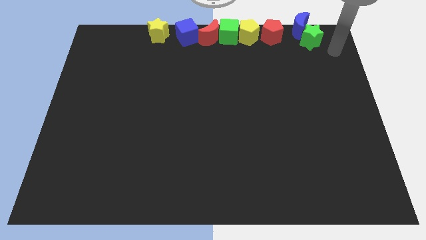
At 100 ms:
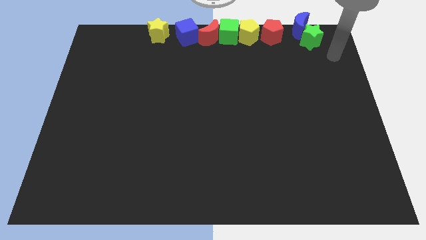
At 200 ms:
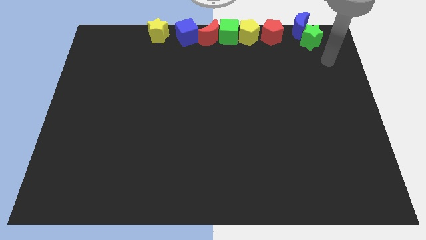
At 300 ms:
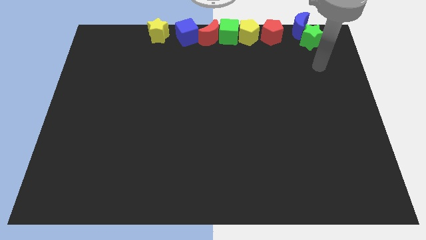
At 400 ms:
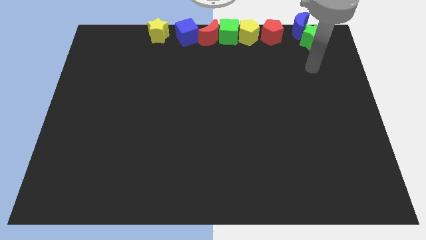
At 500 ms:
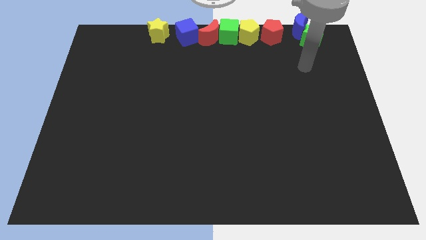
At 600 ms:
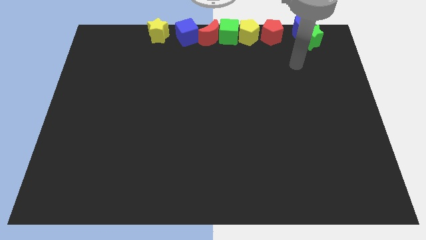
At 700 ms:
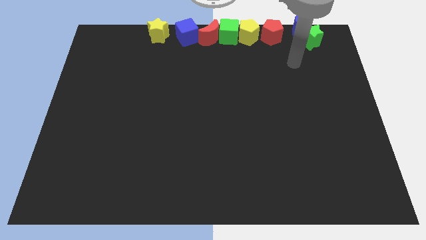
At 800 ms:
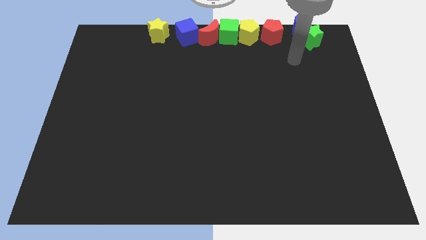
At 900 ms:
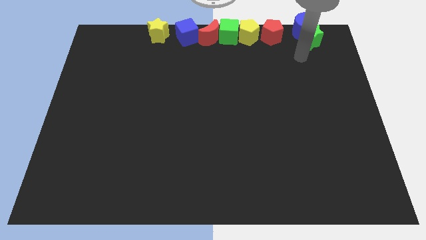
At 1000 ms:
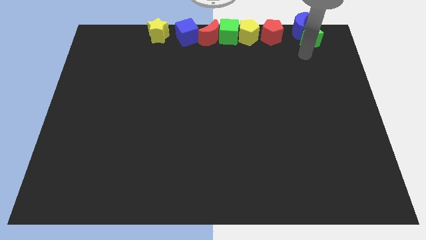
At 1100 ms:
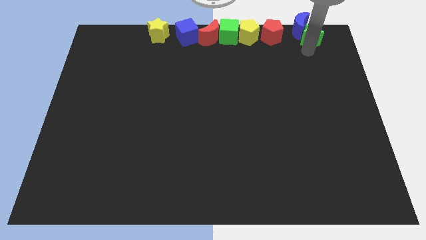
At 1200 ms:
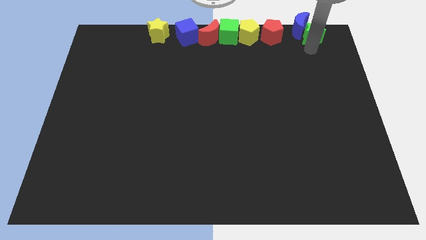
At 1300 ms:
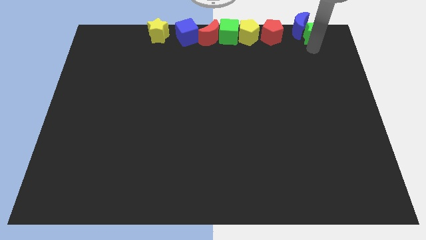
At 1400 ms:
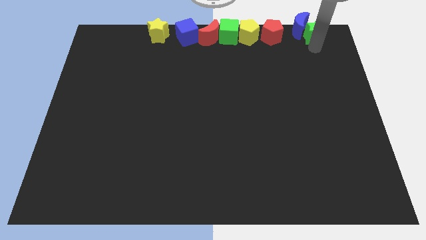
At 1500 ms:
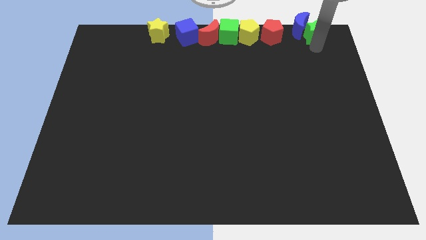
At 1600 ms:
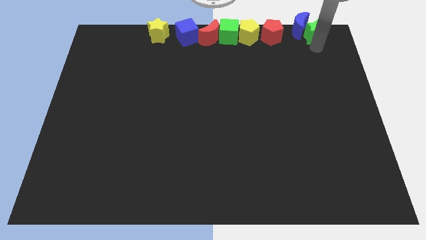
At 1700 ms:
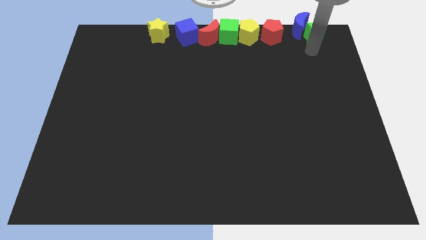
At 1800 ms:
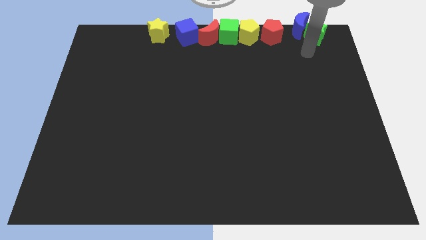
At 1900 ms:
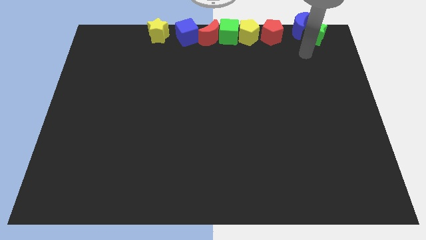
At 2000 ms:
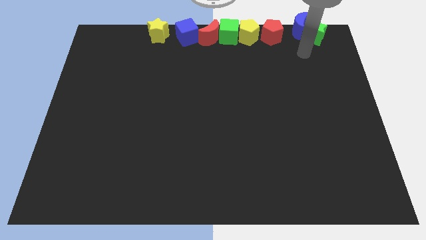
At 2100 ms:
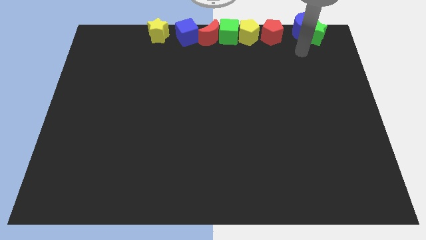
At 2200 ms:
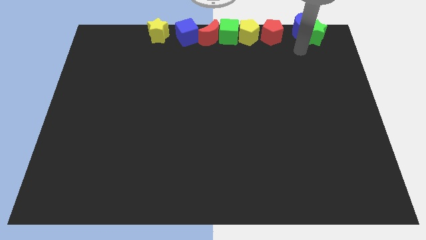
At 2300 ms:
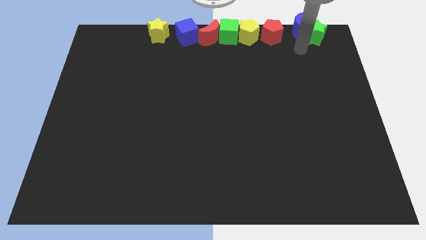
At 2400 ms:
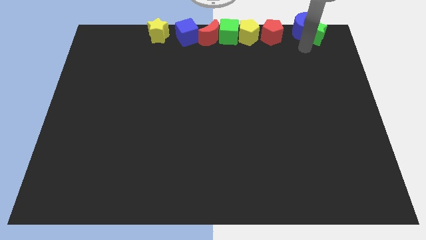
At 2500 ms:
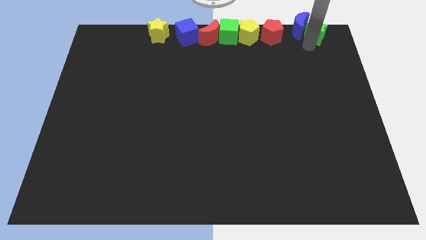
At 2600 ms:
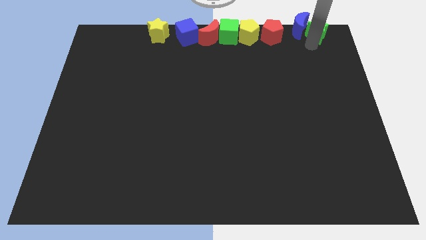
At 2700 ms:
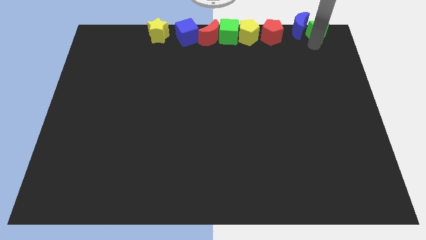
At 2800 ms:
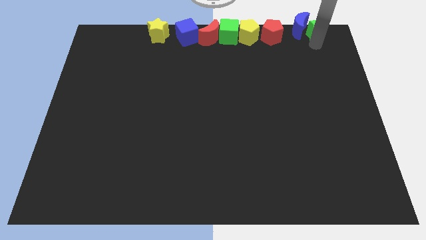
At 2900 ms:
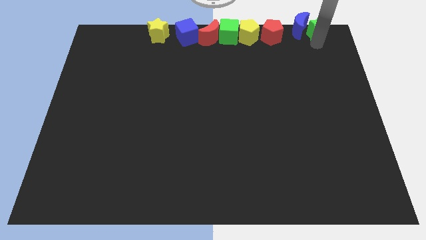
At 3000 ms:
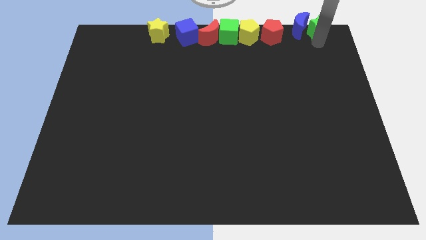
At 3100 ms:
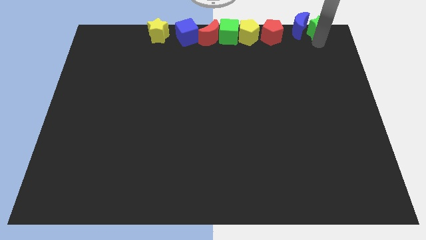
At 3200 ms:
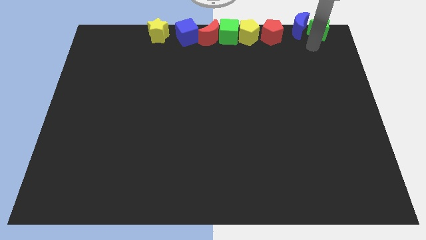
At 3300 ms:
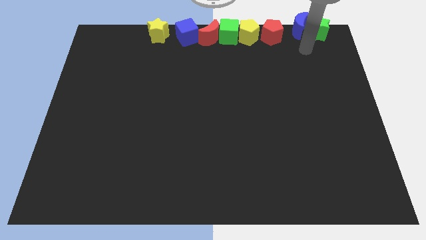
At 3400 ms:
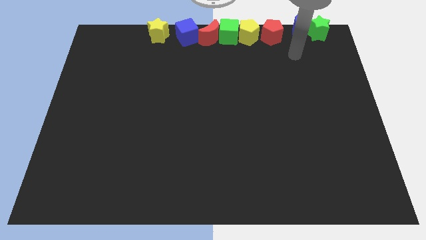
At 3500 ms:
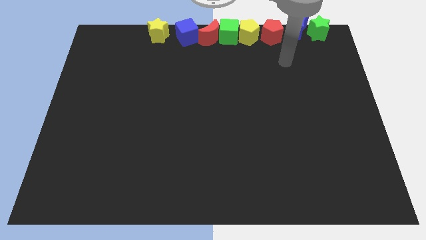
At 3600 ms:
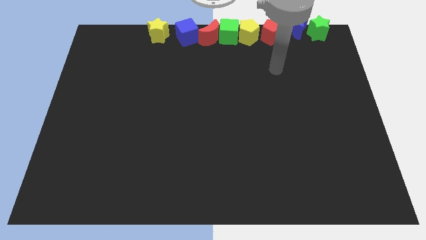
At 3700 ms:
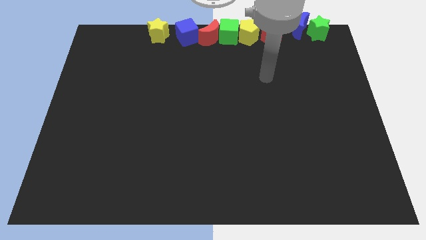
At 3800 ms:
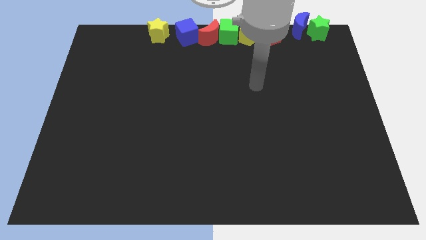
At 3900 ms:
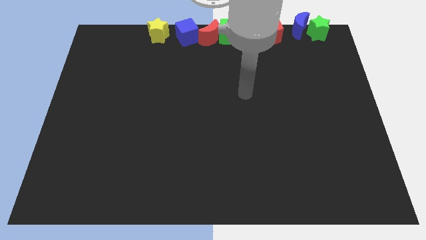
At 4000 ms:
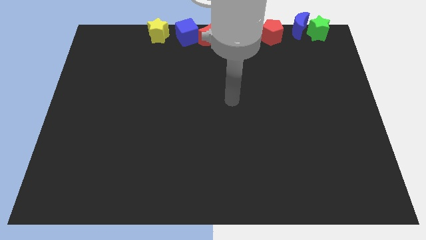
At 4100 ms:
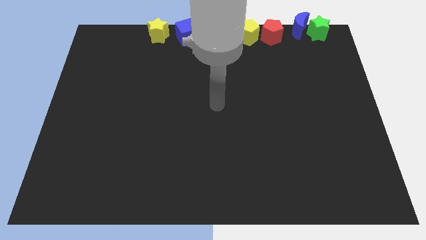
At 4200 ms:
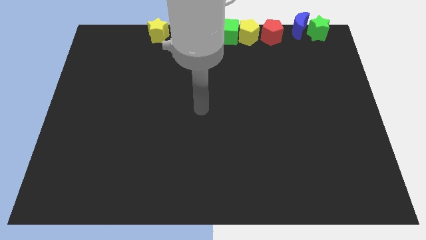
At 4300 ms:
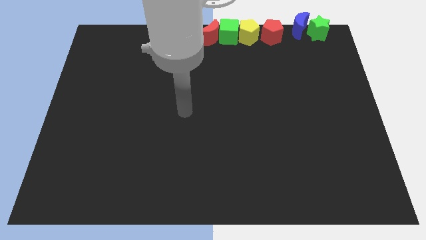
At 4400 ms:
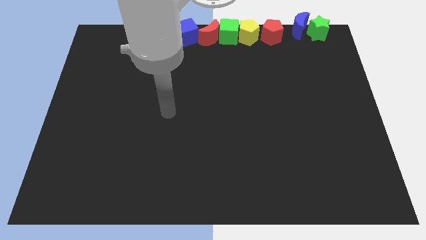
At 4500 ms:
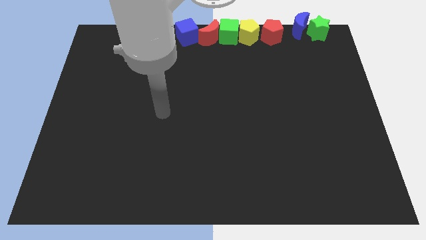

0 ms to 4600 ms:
move the green star to the top of the board

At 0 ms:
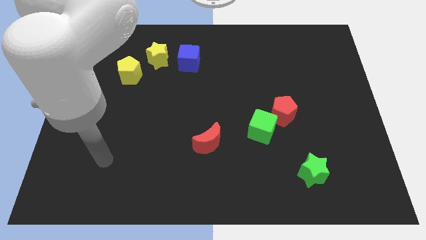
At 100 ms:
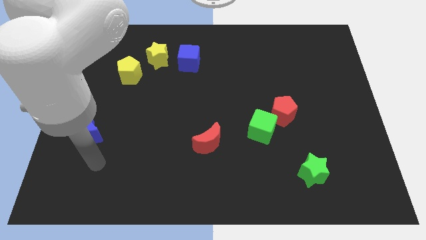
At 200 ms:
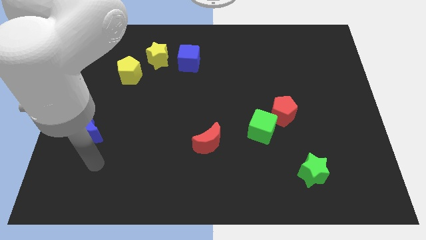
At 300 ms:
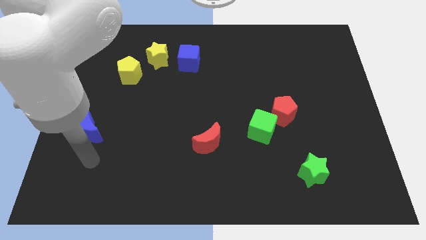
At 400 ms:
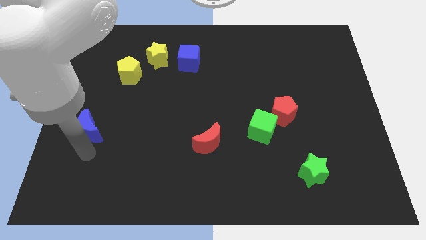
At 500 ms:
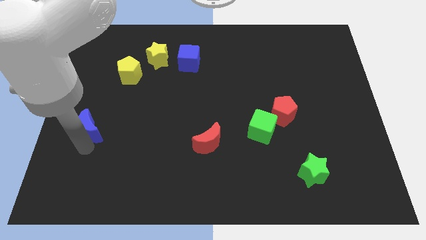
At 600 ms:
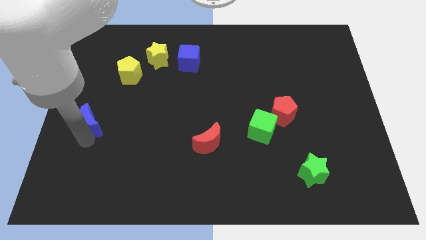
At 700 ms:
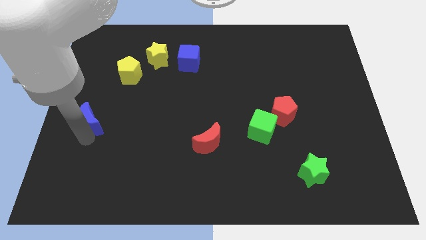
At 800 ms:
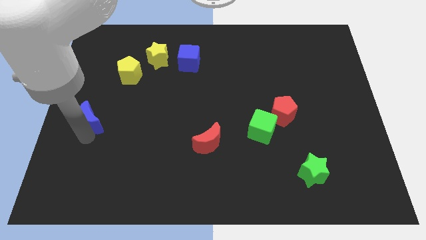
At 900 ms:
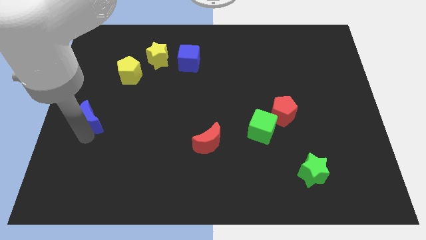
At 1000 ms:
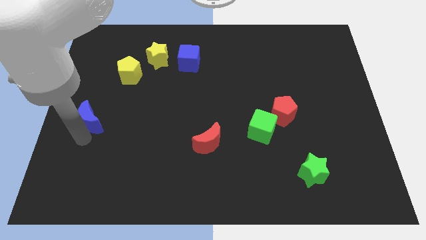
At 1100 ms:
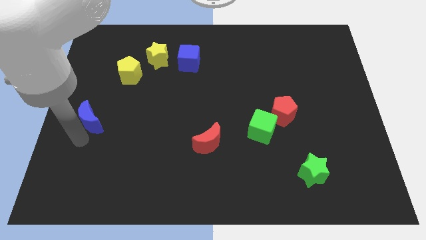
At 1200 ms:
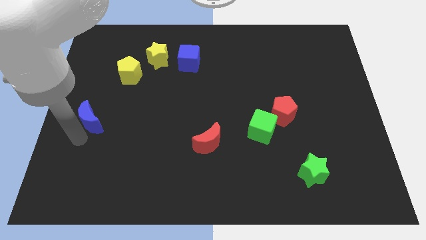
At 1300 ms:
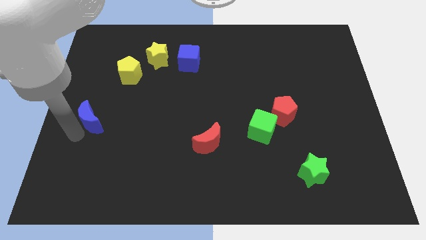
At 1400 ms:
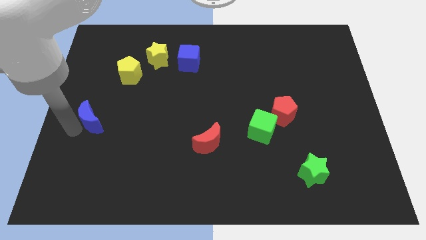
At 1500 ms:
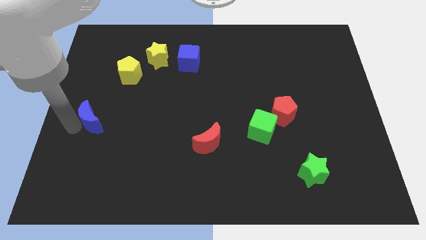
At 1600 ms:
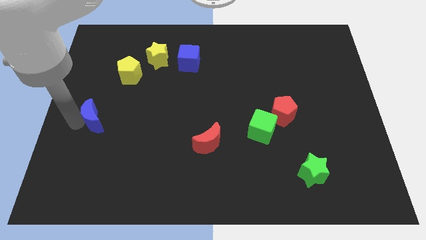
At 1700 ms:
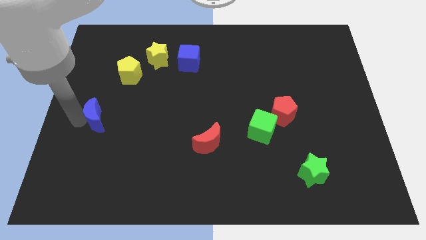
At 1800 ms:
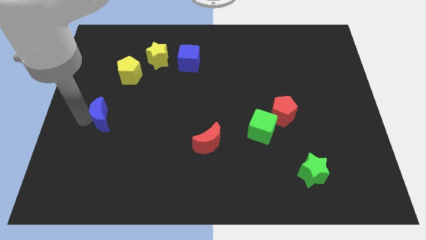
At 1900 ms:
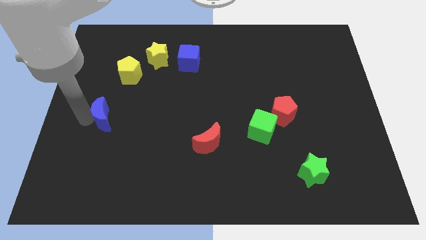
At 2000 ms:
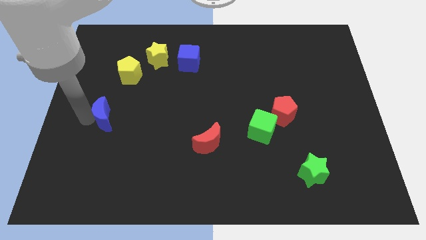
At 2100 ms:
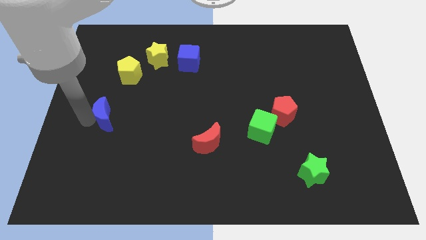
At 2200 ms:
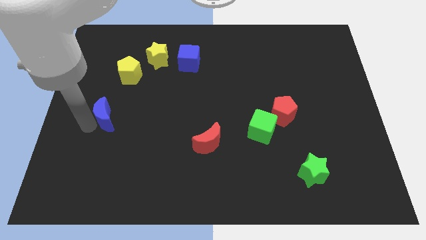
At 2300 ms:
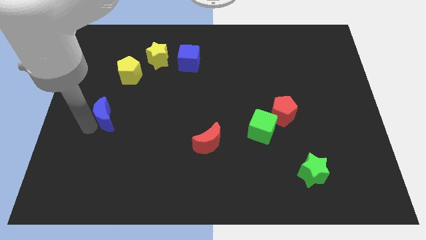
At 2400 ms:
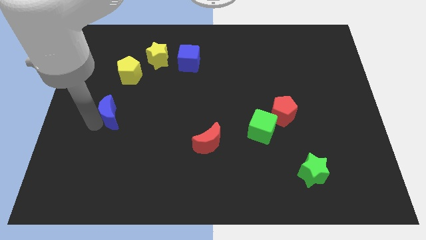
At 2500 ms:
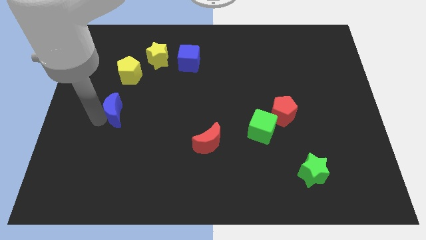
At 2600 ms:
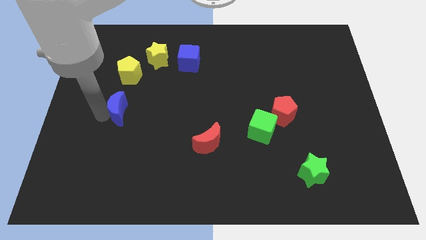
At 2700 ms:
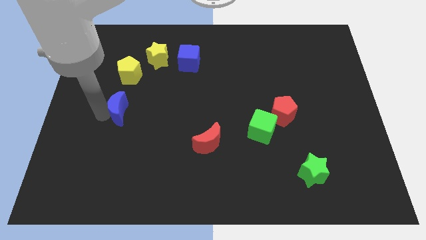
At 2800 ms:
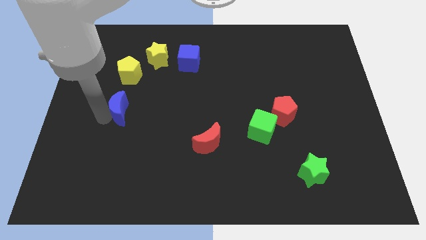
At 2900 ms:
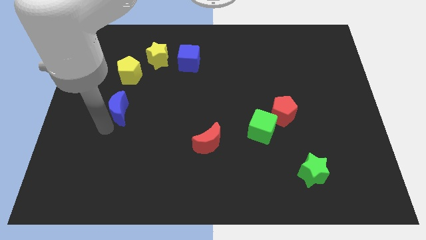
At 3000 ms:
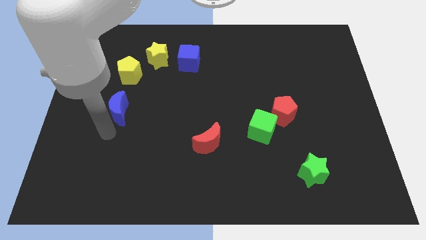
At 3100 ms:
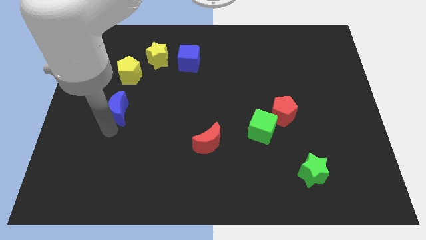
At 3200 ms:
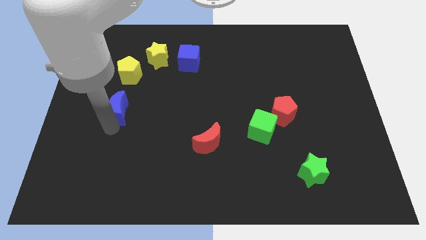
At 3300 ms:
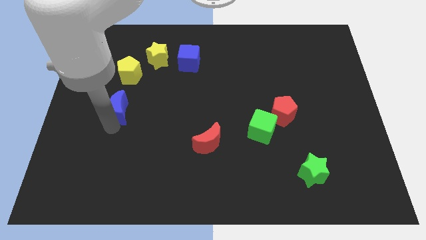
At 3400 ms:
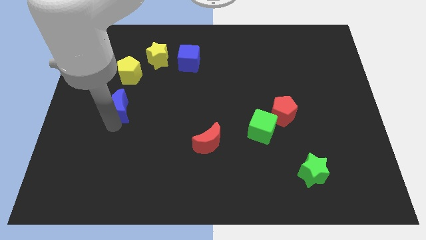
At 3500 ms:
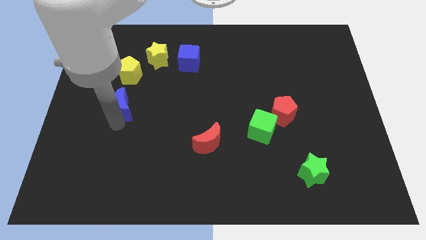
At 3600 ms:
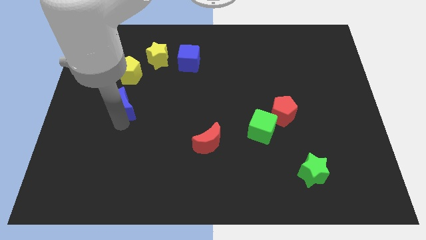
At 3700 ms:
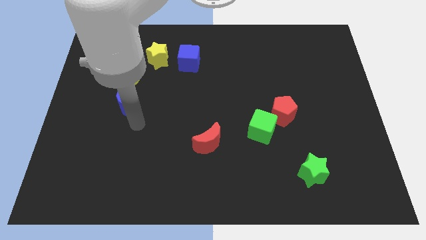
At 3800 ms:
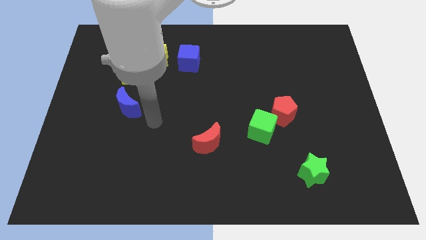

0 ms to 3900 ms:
place the blue moon diagonal to the blue cube
